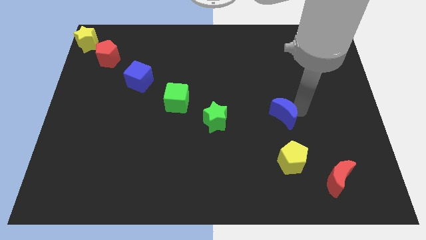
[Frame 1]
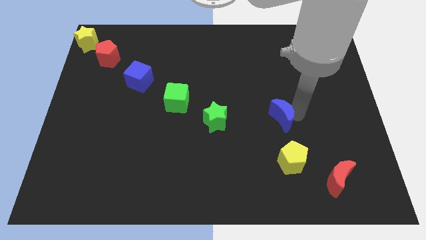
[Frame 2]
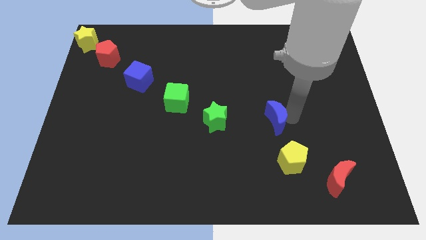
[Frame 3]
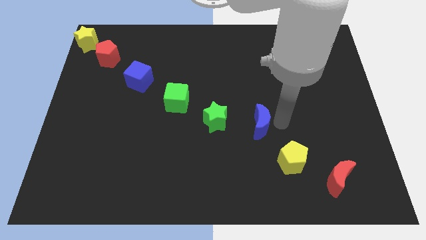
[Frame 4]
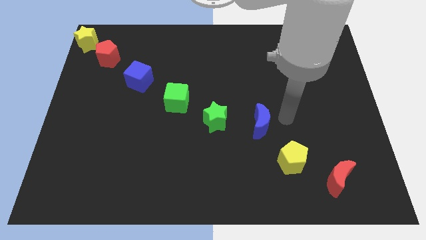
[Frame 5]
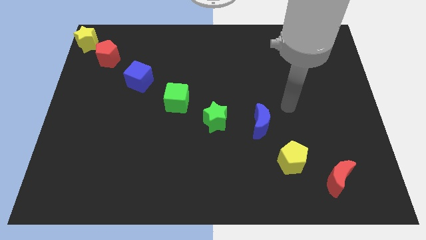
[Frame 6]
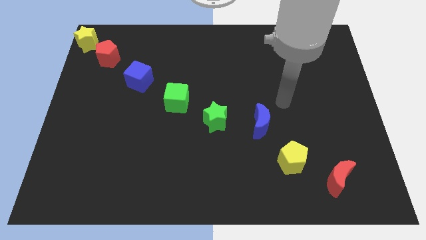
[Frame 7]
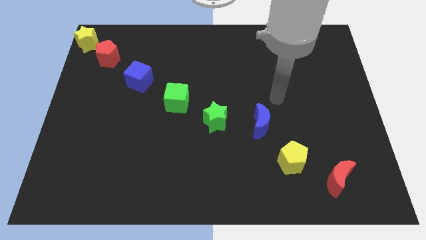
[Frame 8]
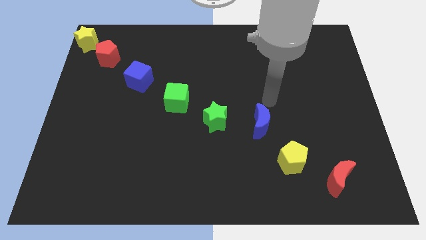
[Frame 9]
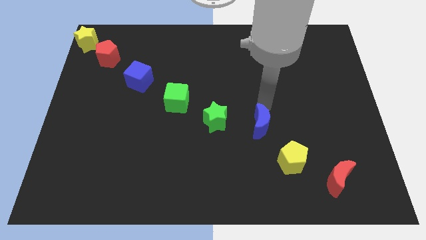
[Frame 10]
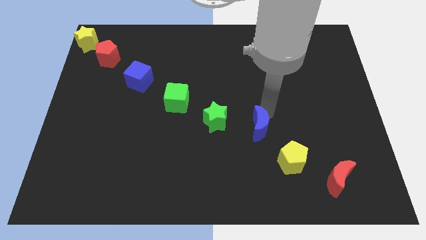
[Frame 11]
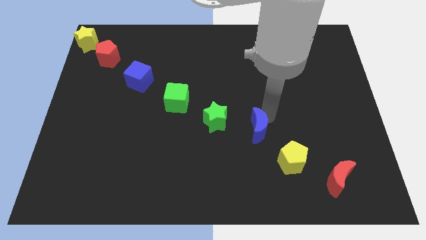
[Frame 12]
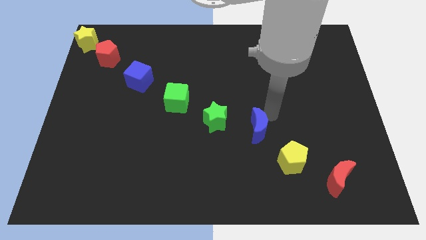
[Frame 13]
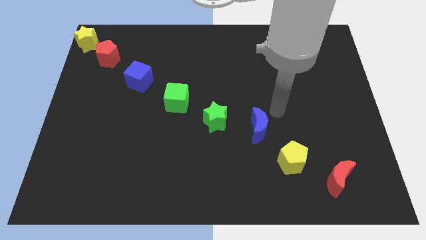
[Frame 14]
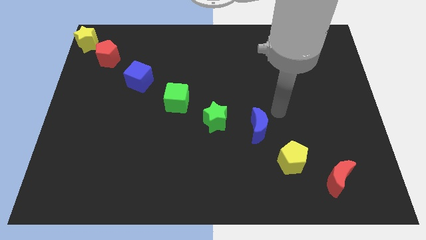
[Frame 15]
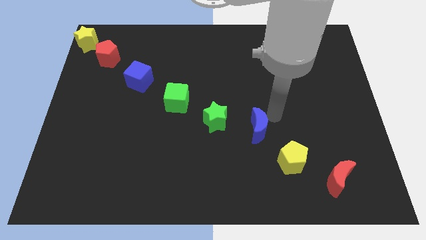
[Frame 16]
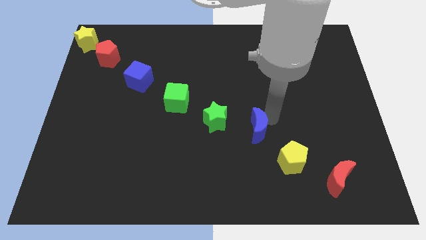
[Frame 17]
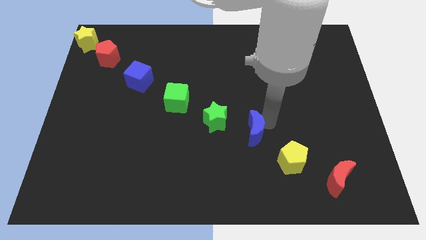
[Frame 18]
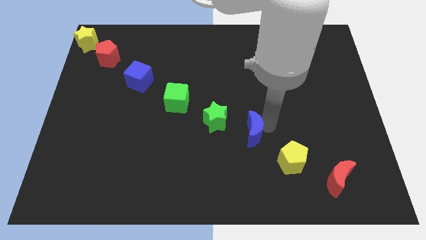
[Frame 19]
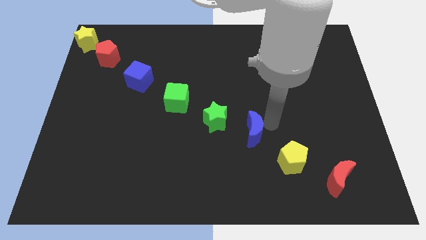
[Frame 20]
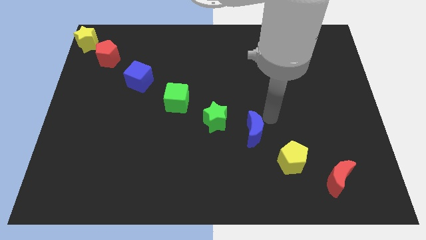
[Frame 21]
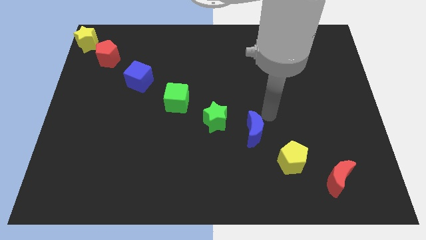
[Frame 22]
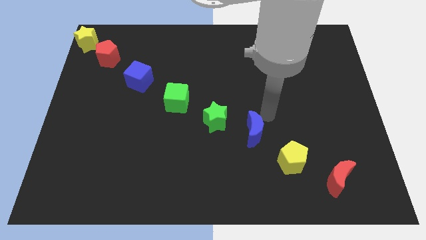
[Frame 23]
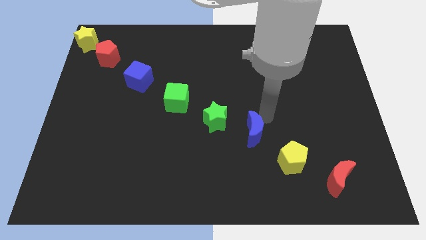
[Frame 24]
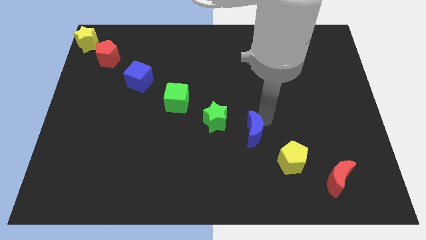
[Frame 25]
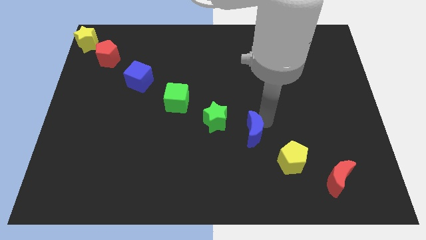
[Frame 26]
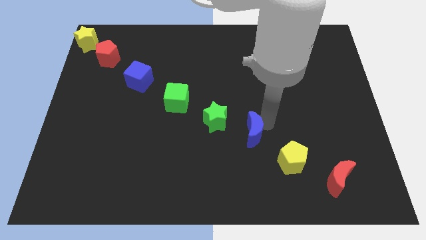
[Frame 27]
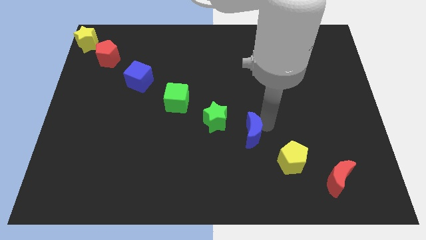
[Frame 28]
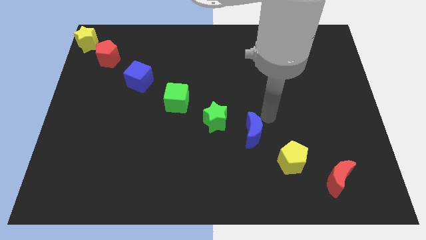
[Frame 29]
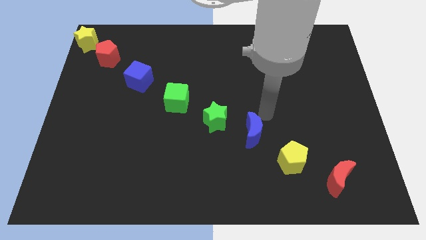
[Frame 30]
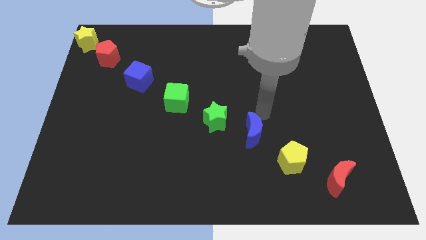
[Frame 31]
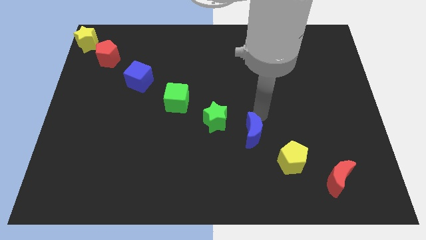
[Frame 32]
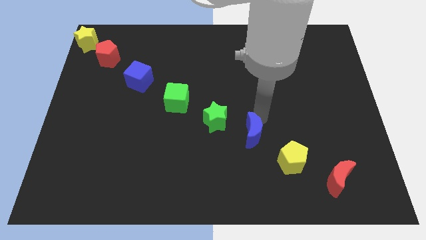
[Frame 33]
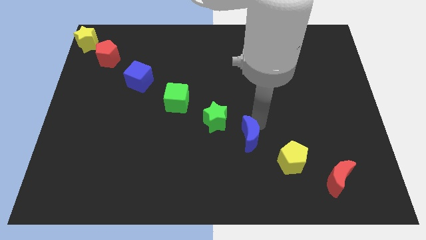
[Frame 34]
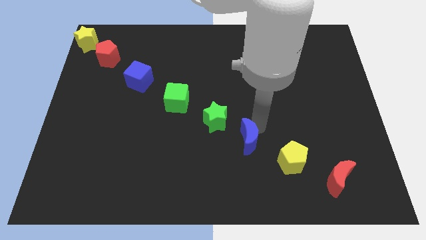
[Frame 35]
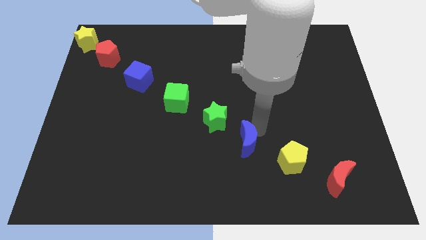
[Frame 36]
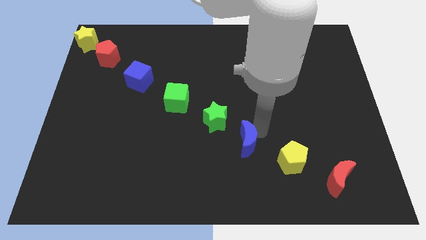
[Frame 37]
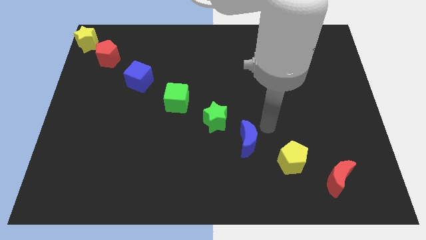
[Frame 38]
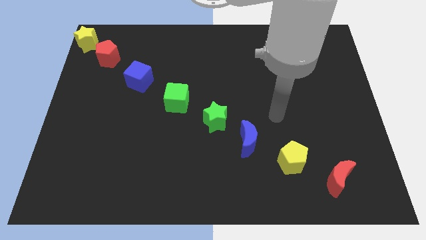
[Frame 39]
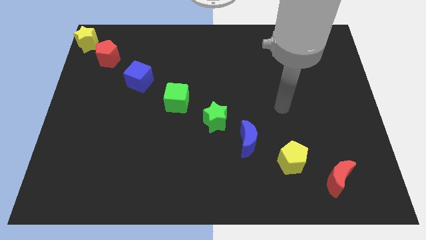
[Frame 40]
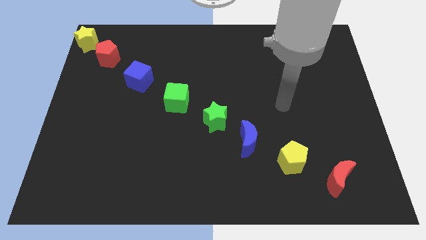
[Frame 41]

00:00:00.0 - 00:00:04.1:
place blue moon in between yellow pentgon and green star

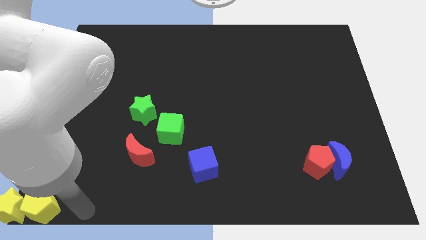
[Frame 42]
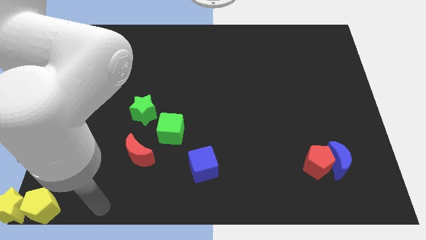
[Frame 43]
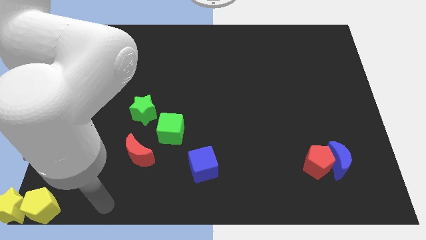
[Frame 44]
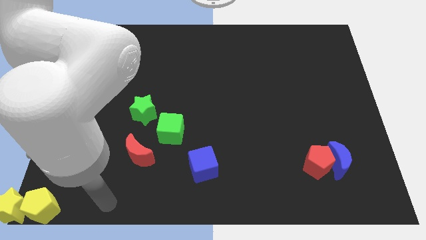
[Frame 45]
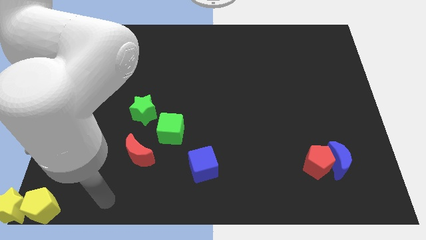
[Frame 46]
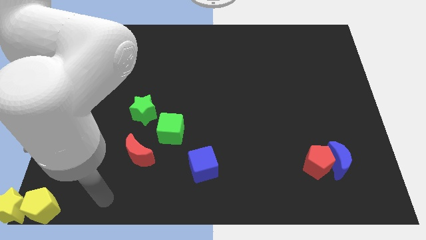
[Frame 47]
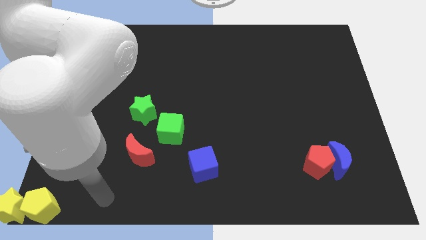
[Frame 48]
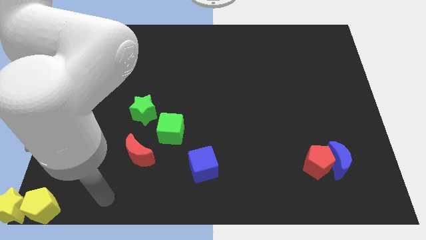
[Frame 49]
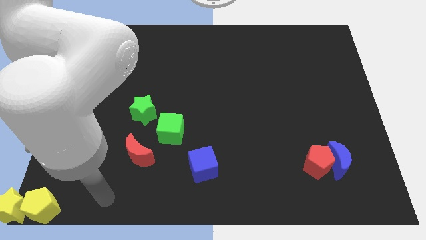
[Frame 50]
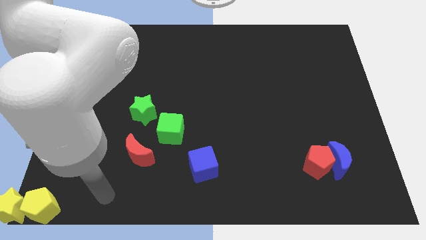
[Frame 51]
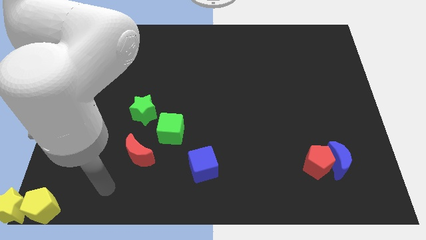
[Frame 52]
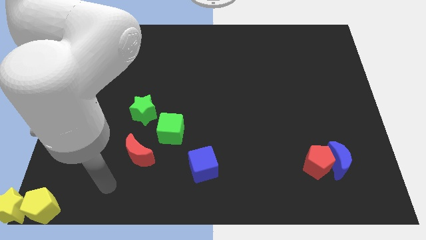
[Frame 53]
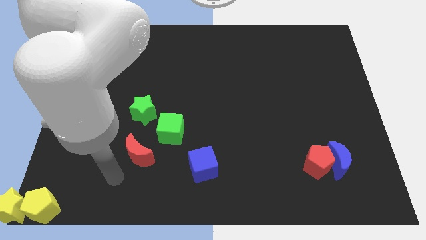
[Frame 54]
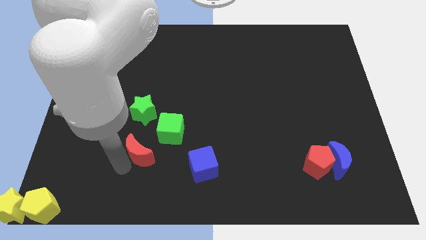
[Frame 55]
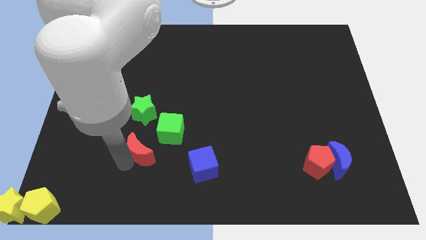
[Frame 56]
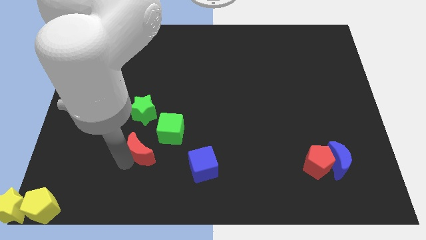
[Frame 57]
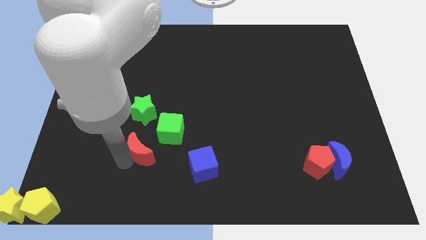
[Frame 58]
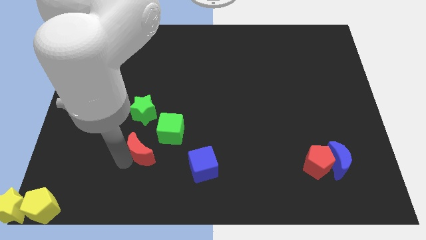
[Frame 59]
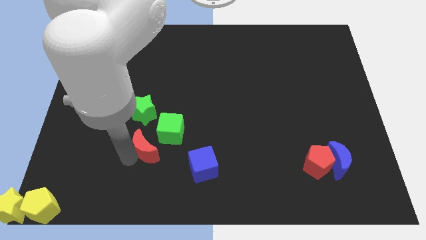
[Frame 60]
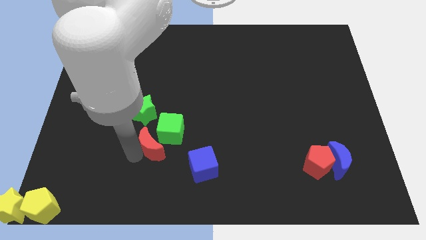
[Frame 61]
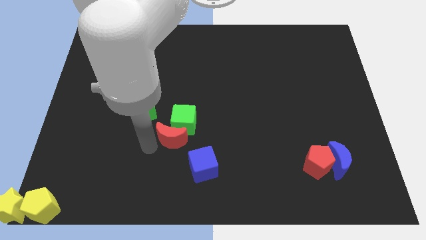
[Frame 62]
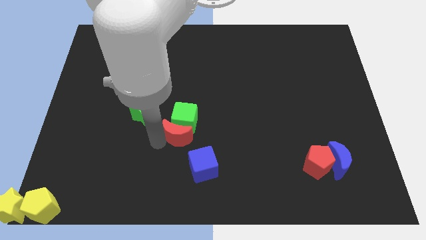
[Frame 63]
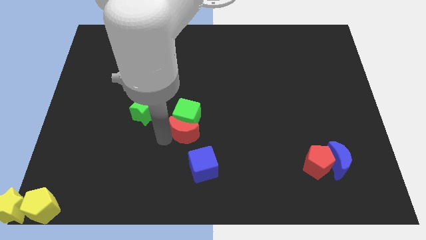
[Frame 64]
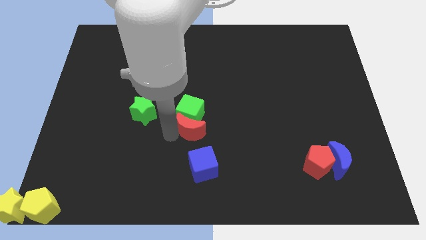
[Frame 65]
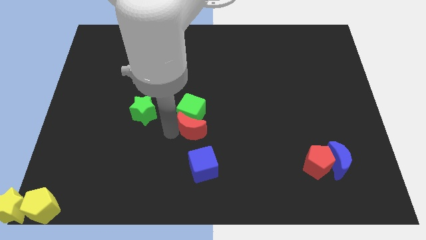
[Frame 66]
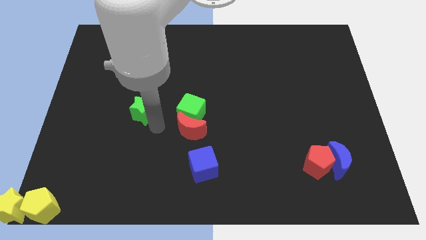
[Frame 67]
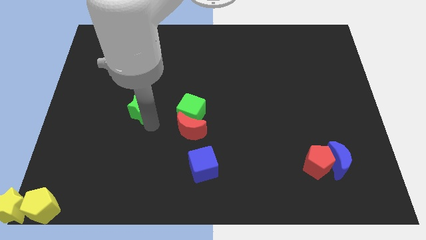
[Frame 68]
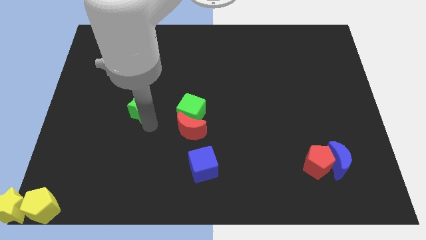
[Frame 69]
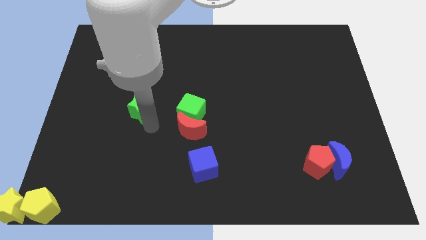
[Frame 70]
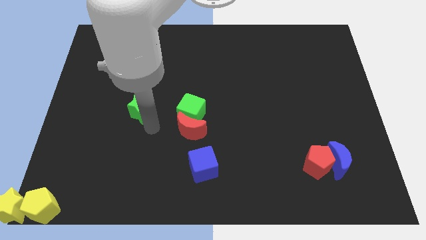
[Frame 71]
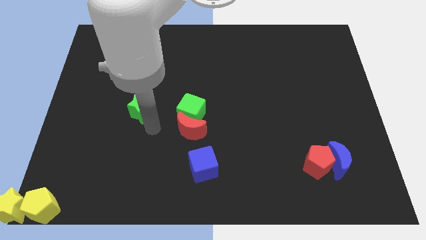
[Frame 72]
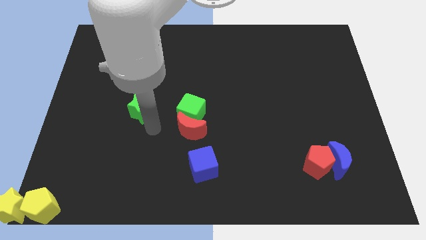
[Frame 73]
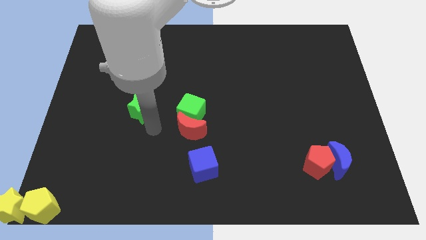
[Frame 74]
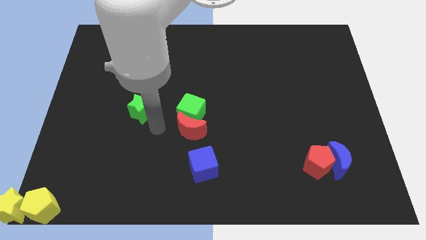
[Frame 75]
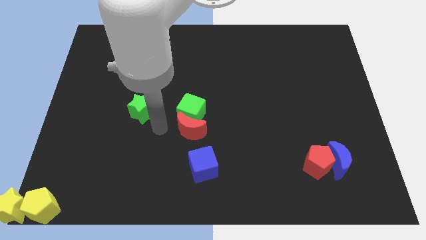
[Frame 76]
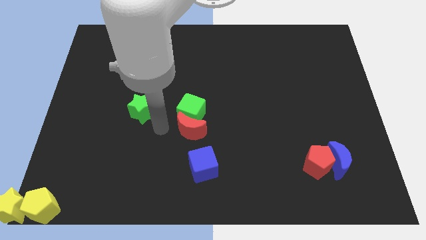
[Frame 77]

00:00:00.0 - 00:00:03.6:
push the red moon into green cube at the bottom

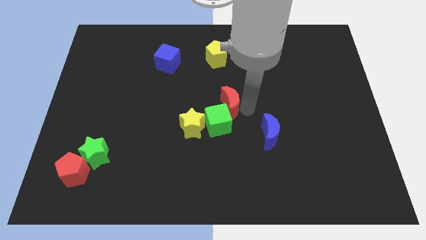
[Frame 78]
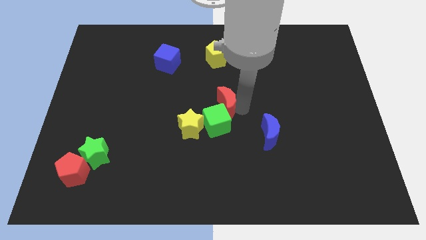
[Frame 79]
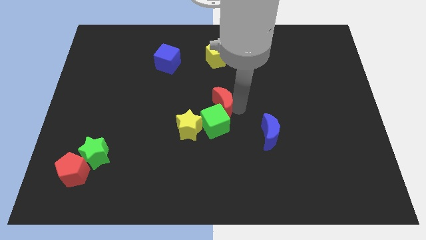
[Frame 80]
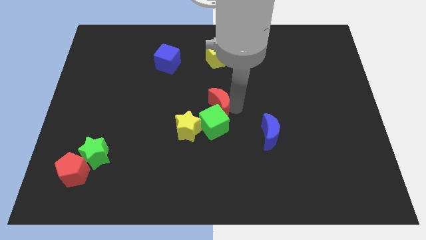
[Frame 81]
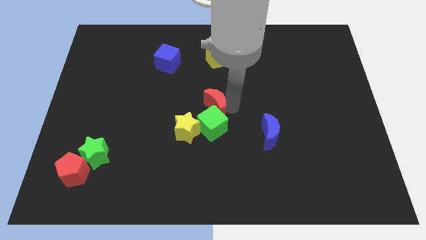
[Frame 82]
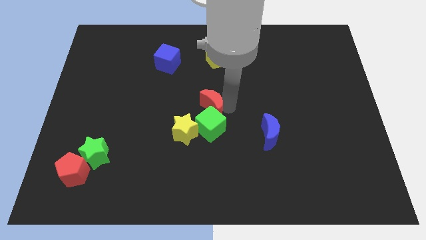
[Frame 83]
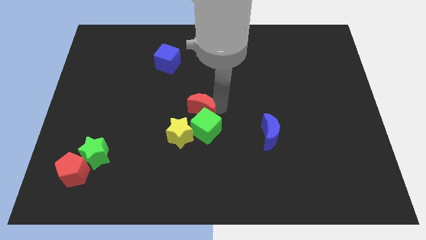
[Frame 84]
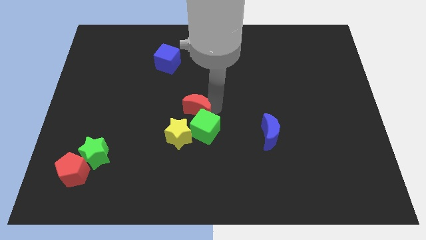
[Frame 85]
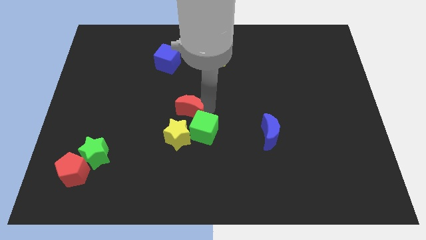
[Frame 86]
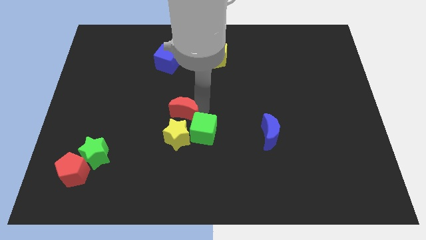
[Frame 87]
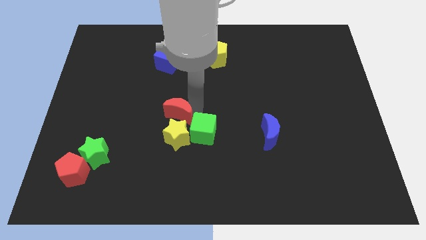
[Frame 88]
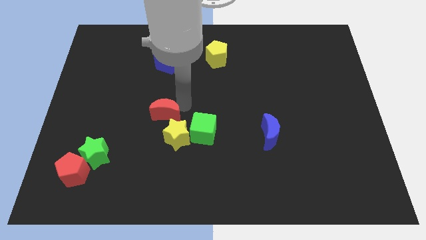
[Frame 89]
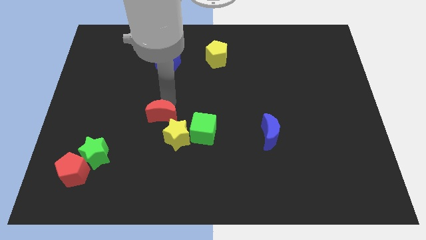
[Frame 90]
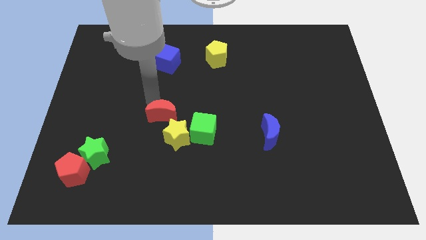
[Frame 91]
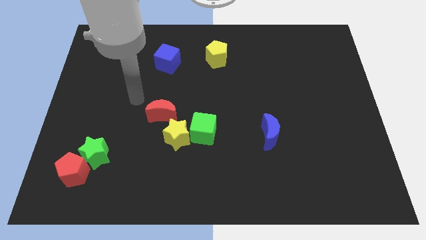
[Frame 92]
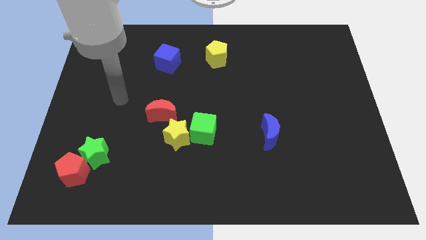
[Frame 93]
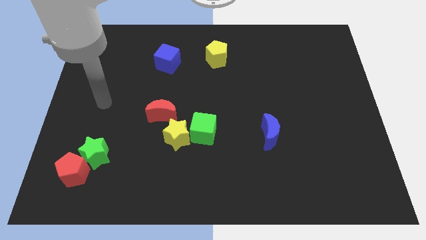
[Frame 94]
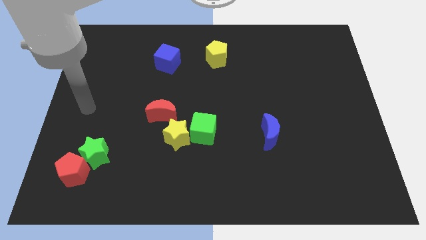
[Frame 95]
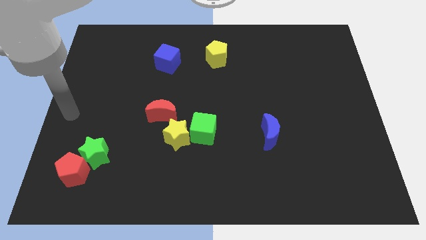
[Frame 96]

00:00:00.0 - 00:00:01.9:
push the red crescent above the yellow star
